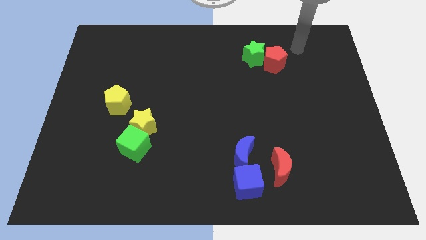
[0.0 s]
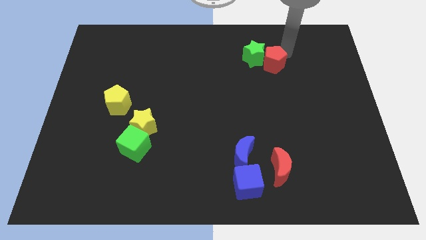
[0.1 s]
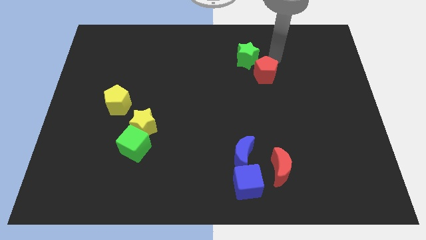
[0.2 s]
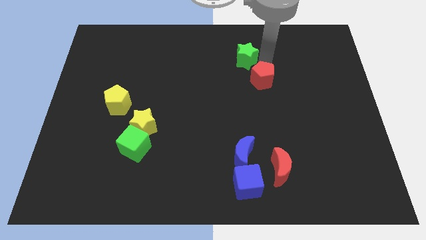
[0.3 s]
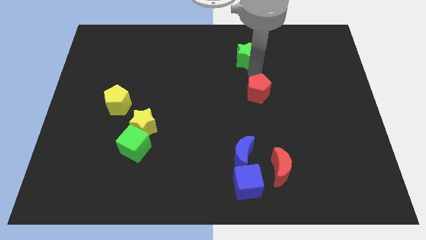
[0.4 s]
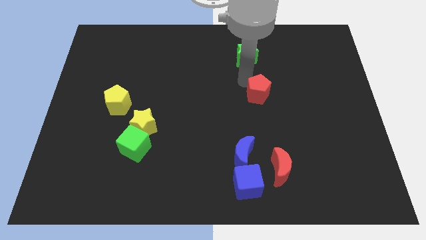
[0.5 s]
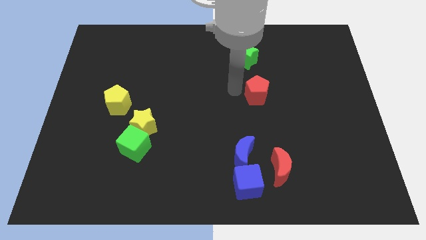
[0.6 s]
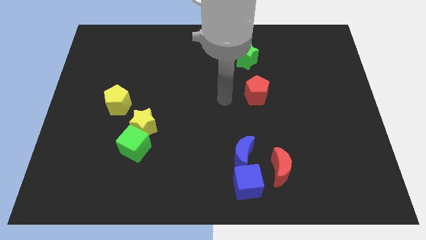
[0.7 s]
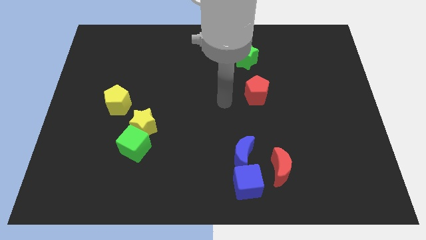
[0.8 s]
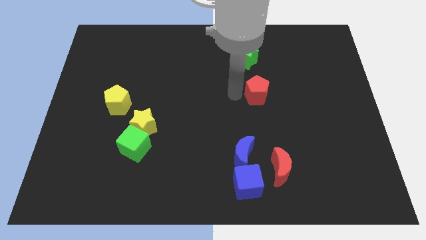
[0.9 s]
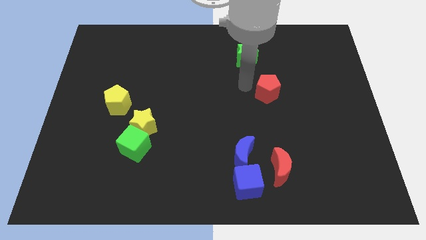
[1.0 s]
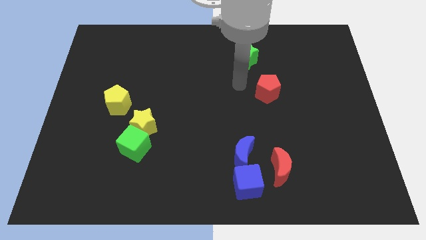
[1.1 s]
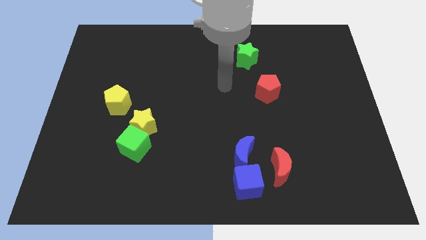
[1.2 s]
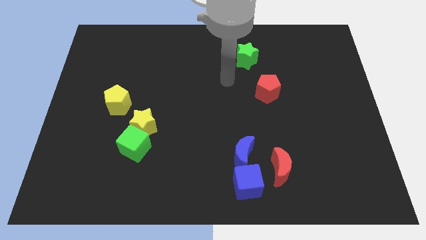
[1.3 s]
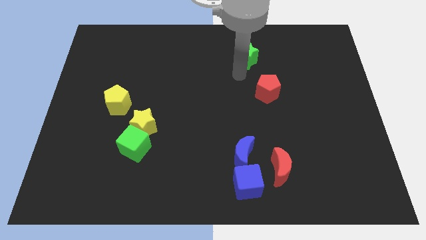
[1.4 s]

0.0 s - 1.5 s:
separate the red pentagon from the green star

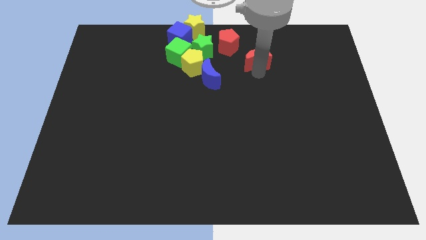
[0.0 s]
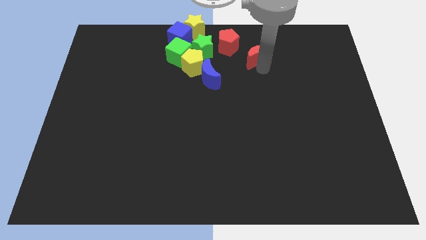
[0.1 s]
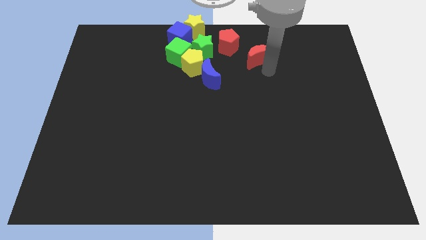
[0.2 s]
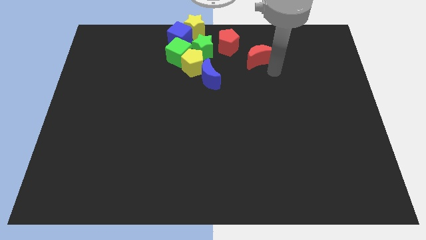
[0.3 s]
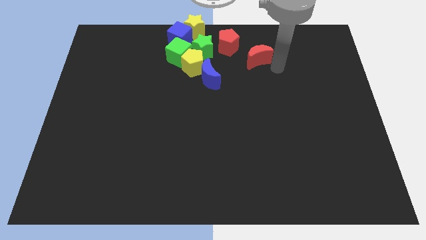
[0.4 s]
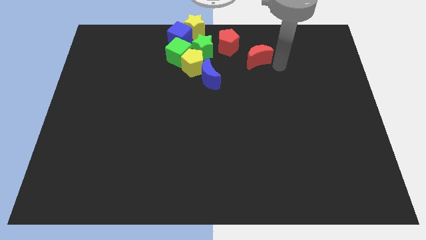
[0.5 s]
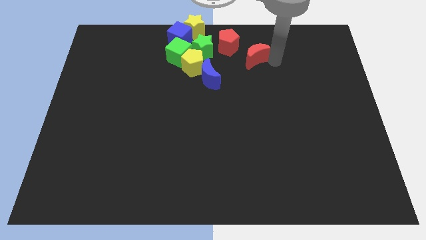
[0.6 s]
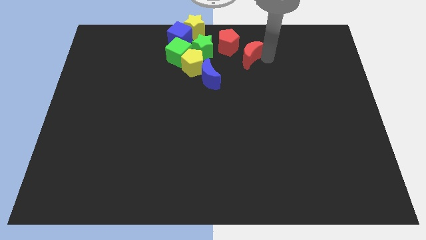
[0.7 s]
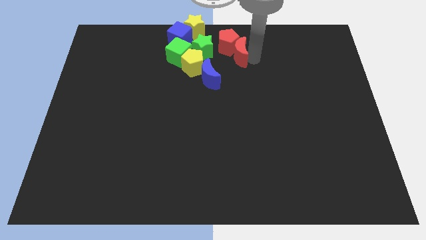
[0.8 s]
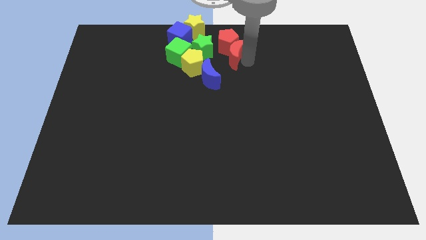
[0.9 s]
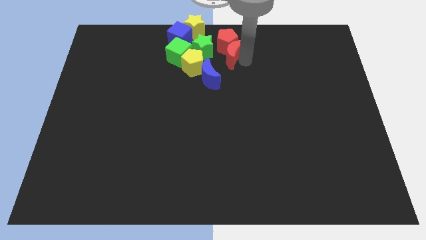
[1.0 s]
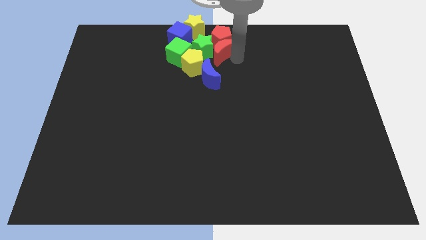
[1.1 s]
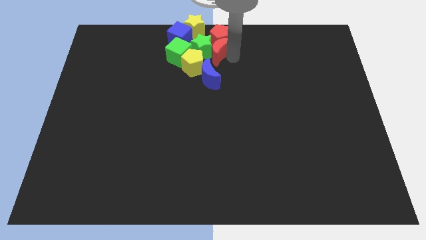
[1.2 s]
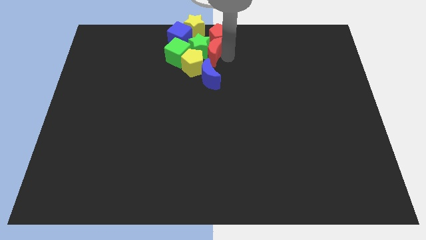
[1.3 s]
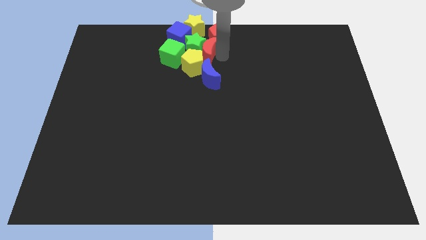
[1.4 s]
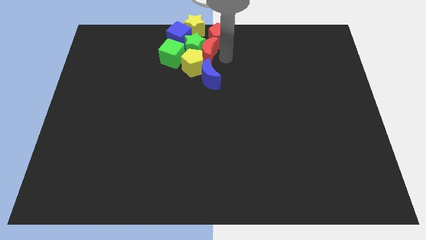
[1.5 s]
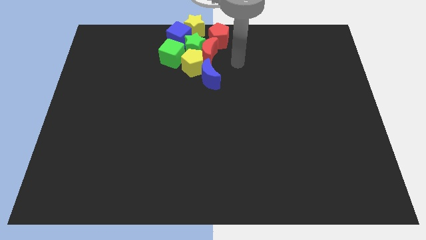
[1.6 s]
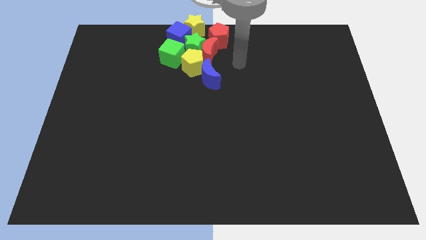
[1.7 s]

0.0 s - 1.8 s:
push the red moon into the green star

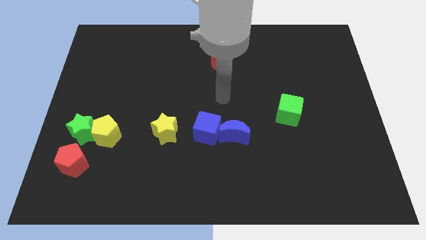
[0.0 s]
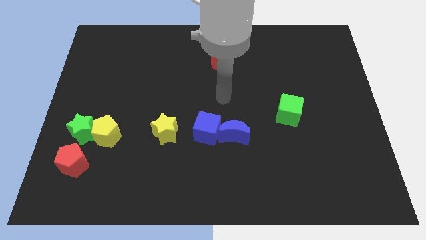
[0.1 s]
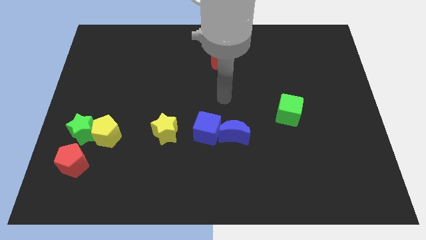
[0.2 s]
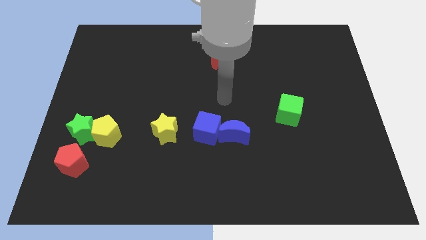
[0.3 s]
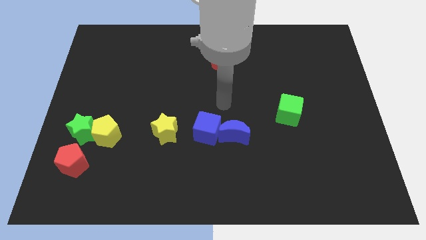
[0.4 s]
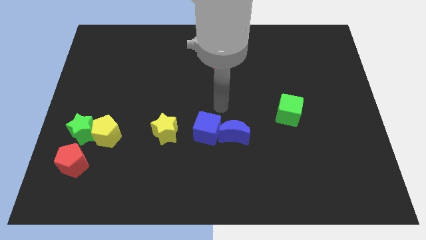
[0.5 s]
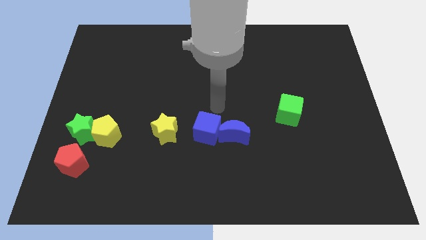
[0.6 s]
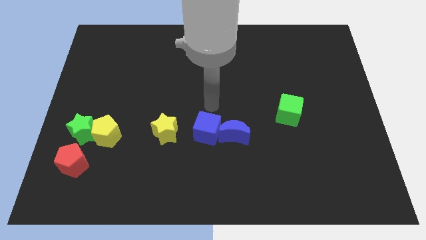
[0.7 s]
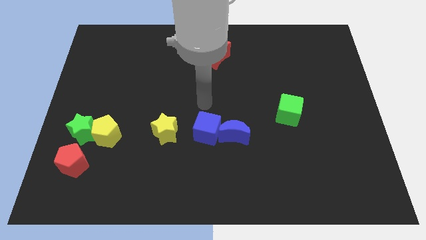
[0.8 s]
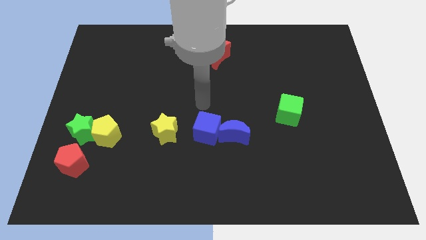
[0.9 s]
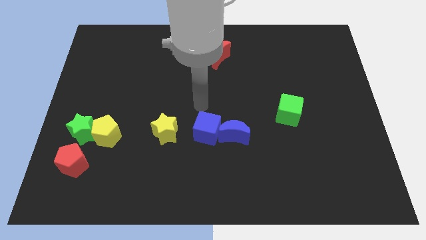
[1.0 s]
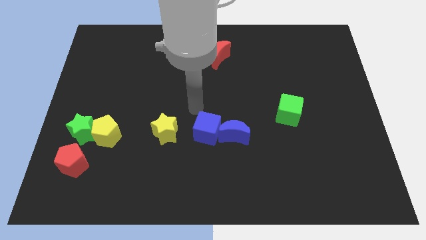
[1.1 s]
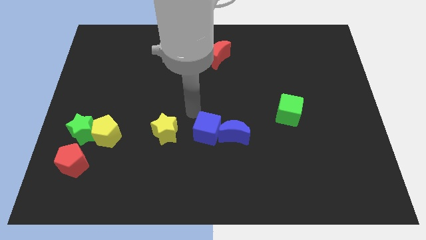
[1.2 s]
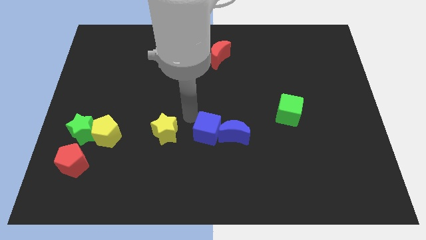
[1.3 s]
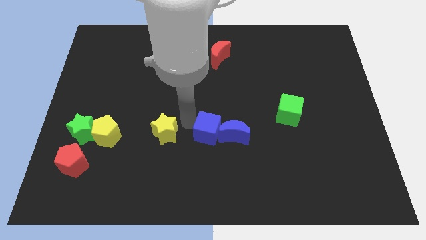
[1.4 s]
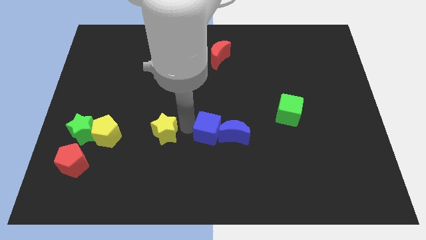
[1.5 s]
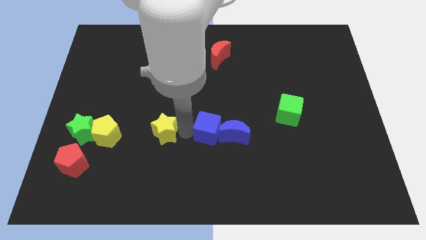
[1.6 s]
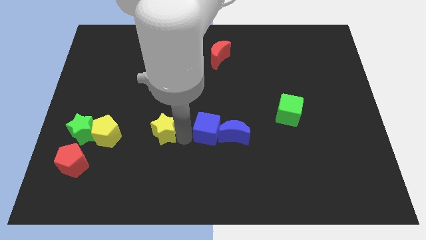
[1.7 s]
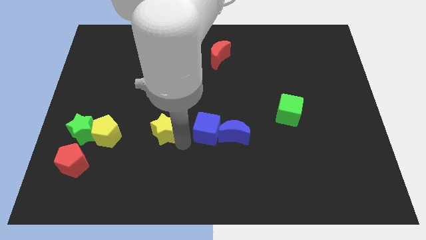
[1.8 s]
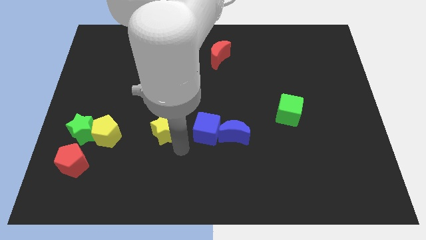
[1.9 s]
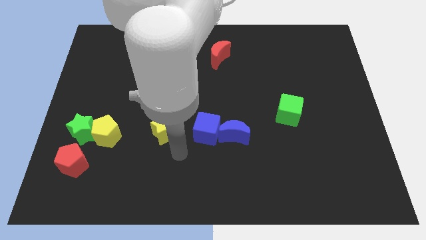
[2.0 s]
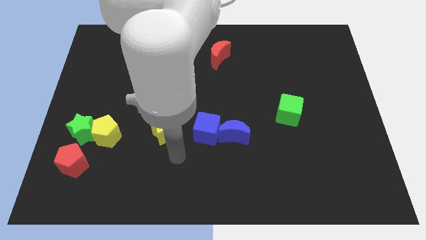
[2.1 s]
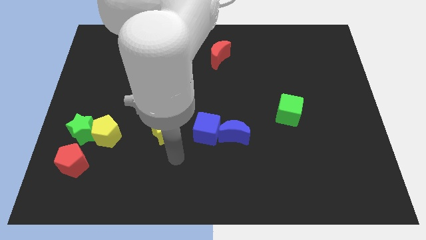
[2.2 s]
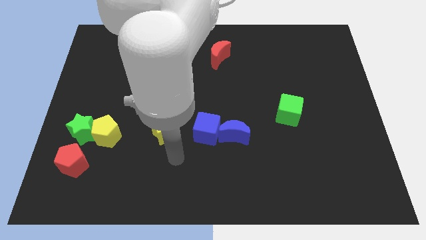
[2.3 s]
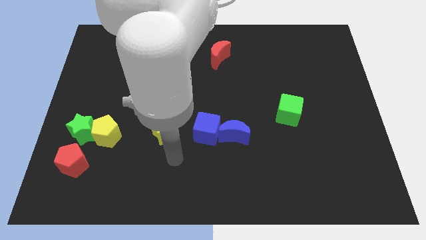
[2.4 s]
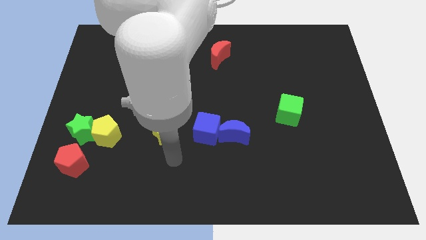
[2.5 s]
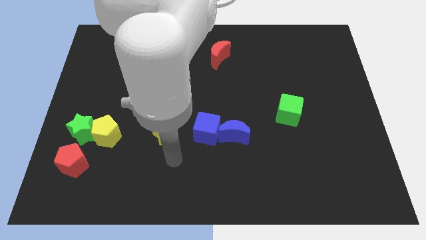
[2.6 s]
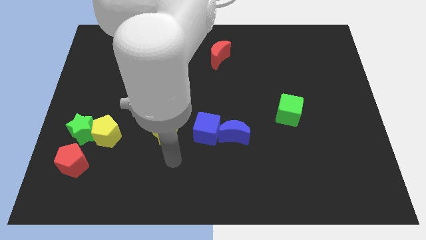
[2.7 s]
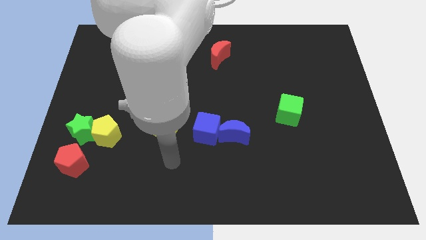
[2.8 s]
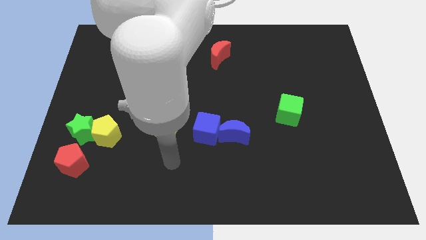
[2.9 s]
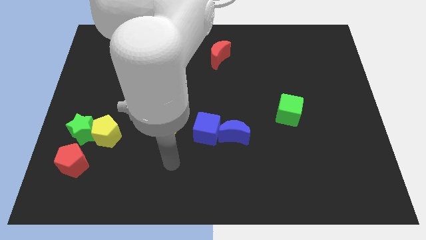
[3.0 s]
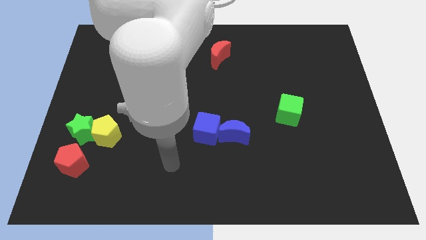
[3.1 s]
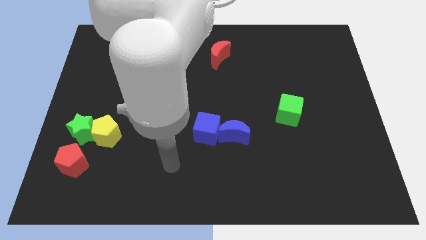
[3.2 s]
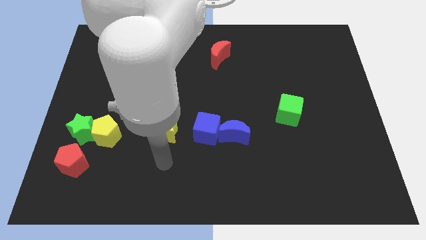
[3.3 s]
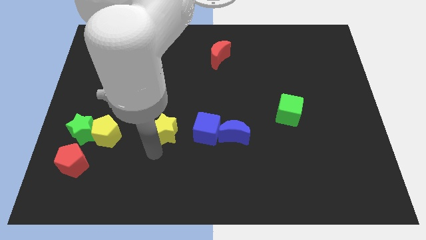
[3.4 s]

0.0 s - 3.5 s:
move your arm to the bottom of the yellow star

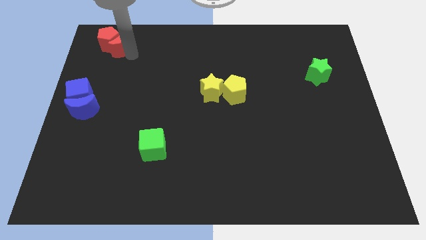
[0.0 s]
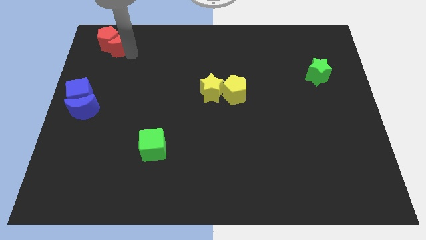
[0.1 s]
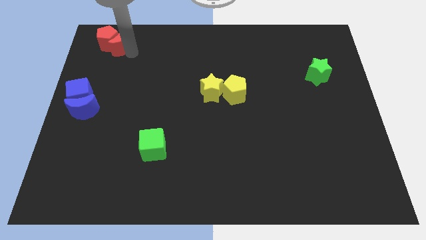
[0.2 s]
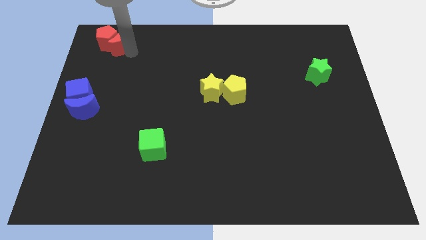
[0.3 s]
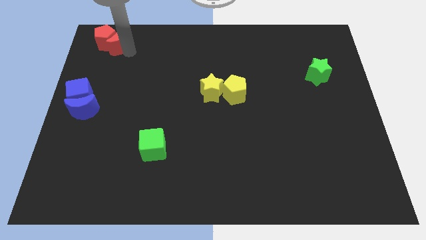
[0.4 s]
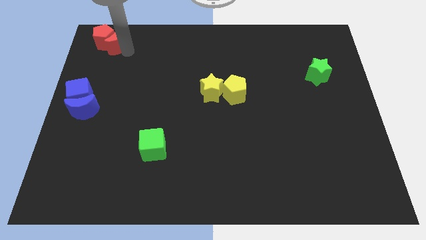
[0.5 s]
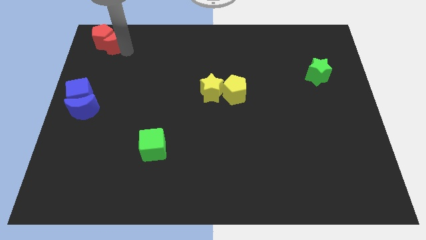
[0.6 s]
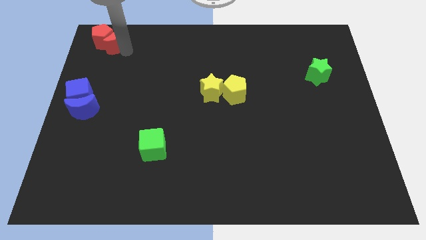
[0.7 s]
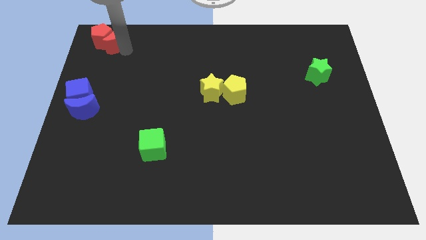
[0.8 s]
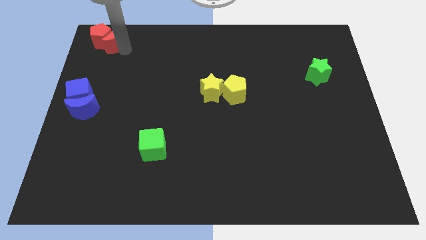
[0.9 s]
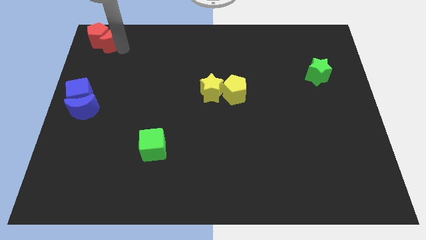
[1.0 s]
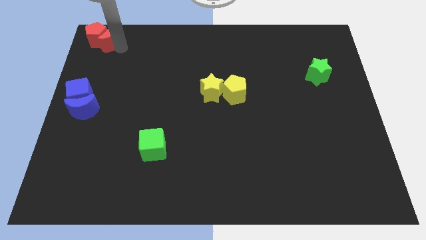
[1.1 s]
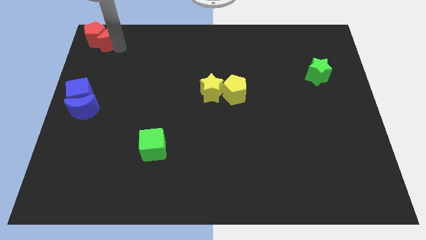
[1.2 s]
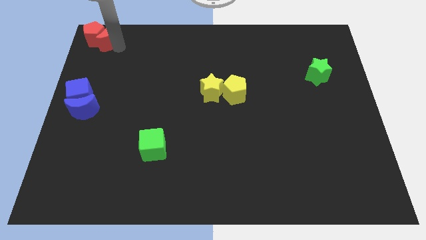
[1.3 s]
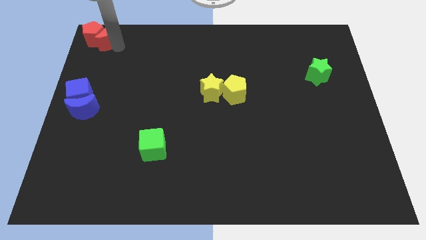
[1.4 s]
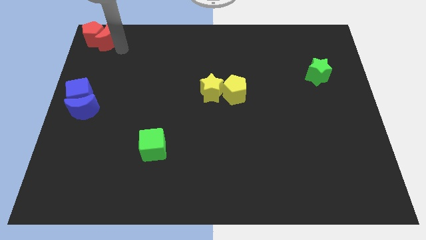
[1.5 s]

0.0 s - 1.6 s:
push the red pentagon with red crescent to the top left corner of the board

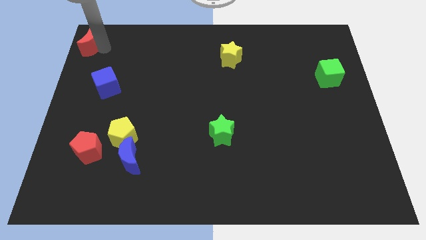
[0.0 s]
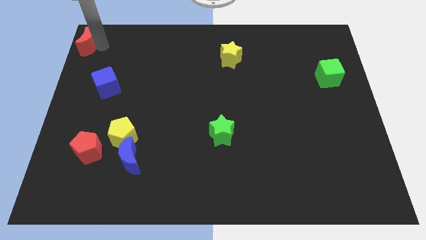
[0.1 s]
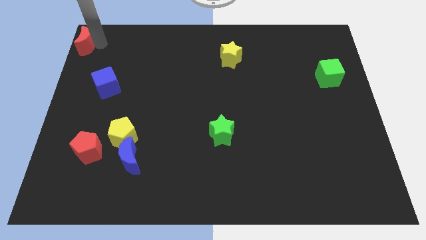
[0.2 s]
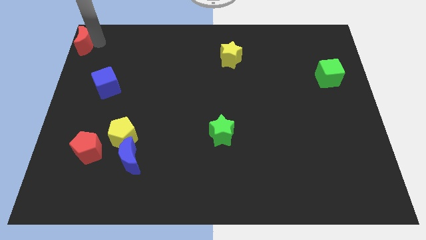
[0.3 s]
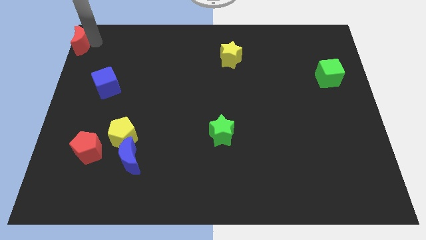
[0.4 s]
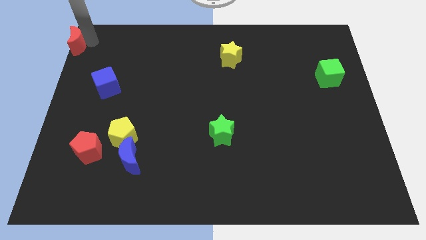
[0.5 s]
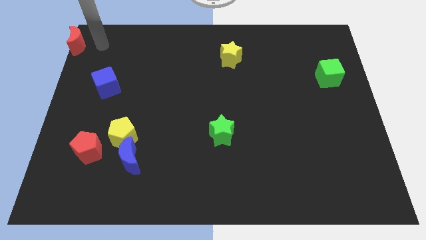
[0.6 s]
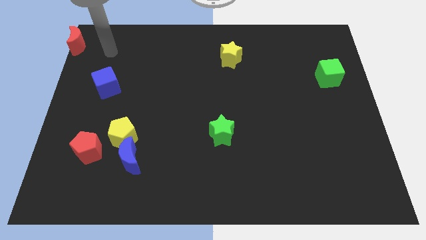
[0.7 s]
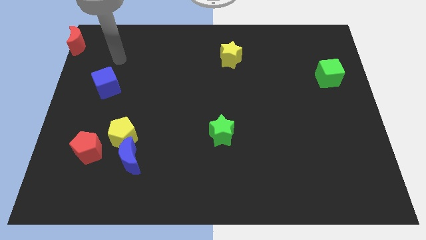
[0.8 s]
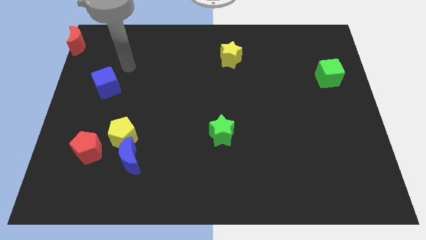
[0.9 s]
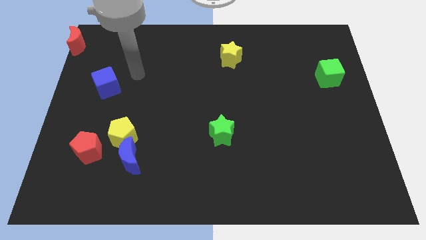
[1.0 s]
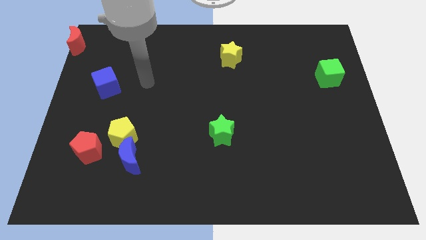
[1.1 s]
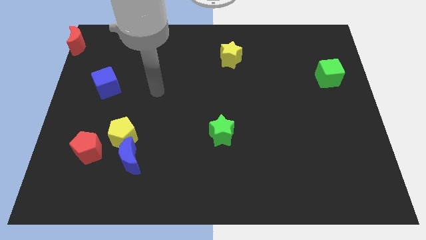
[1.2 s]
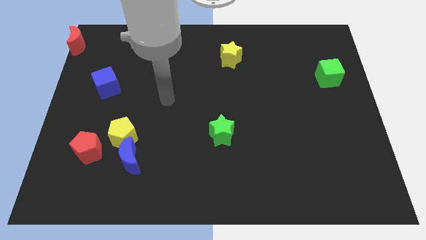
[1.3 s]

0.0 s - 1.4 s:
push the red moon to the top left corner
